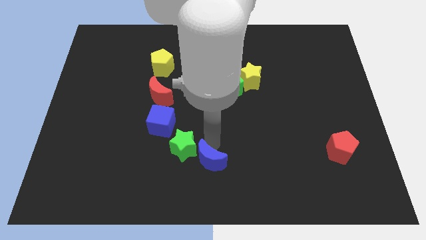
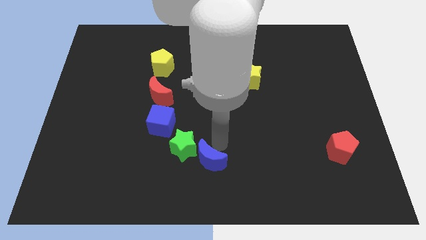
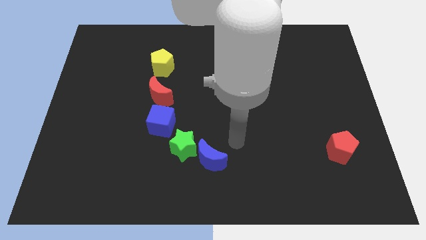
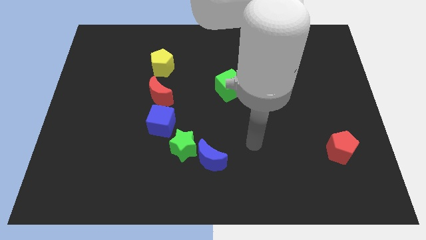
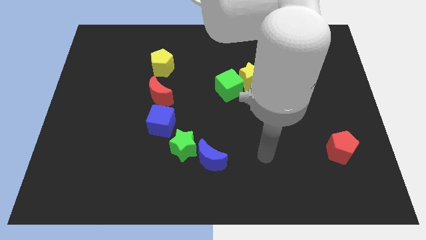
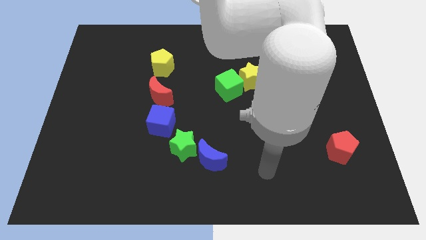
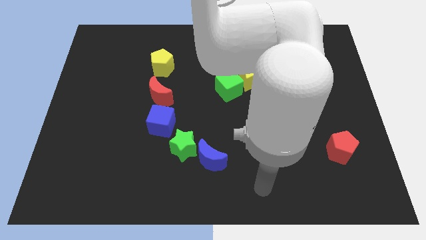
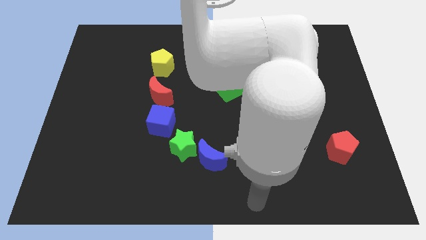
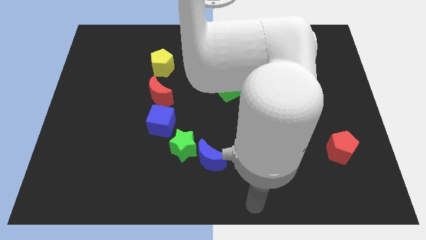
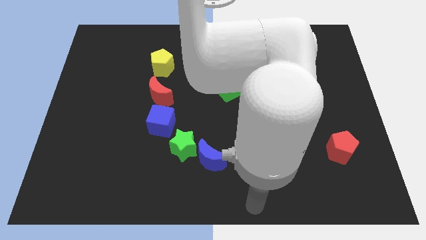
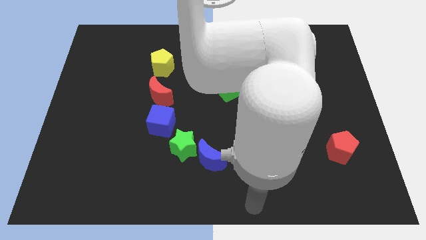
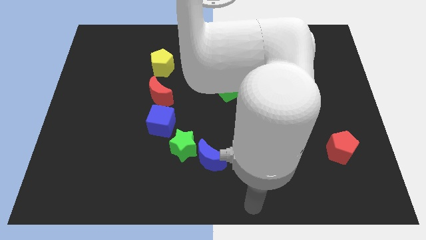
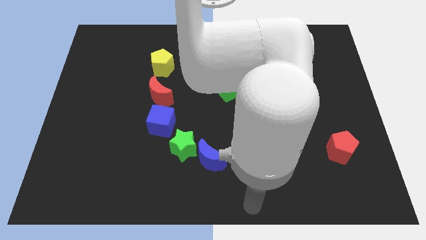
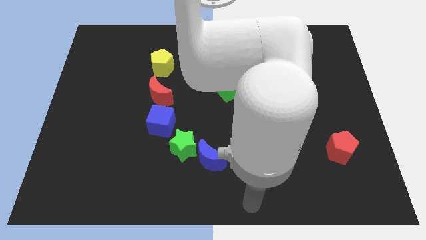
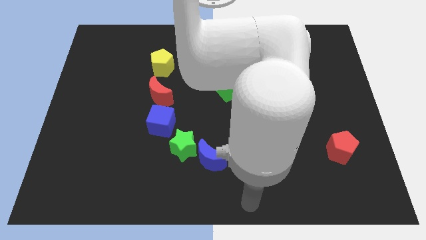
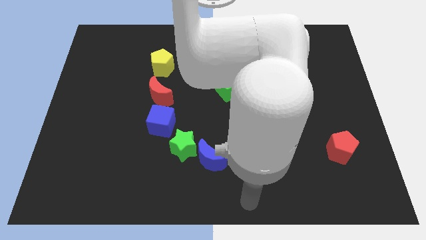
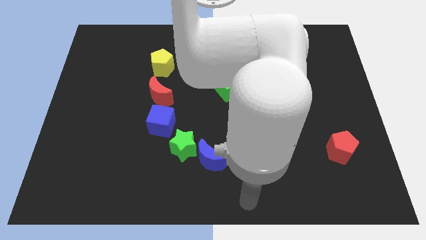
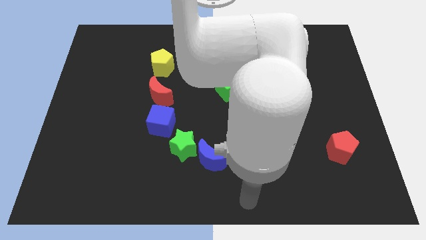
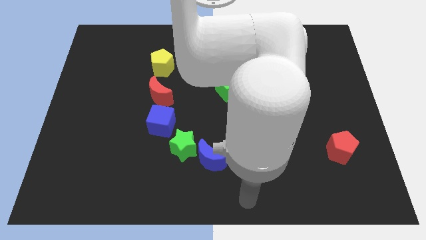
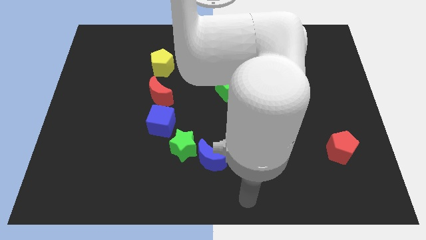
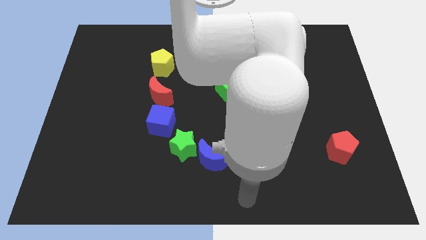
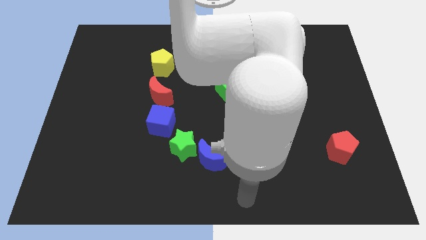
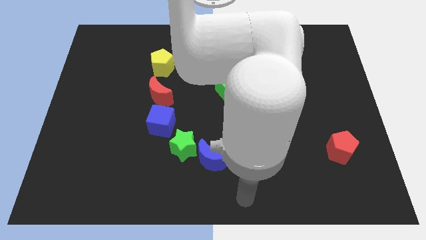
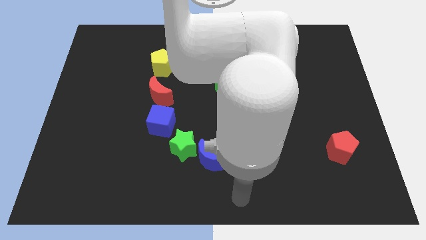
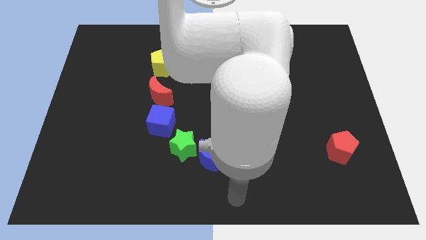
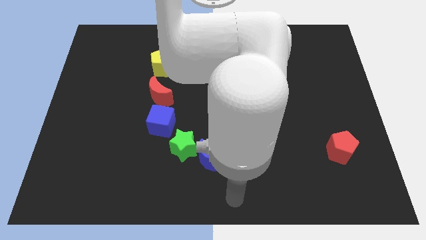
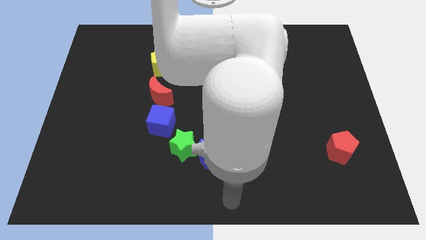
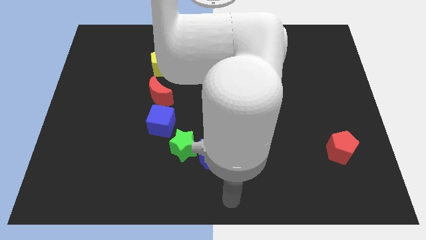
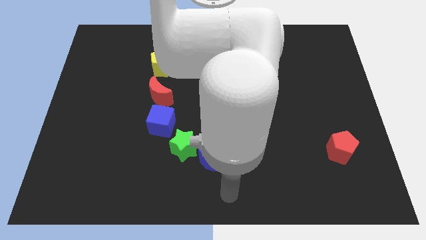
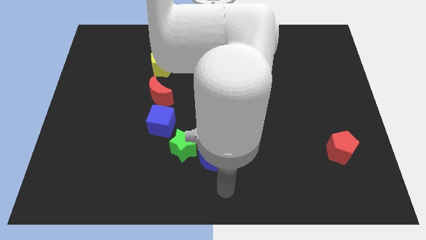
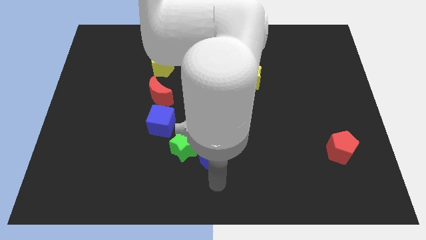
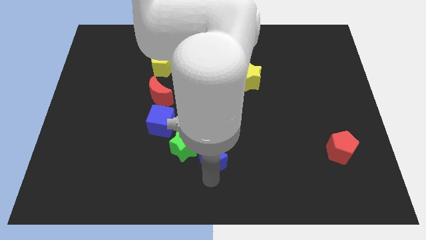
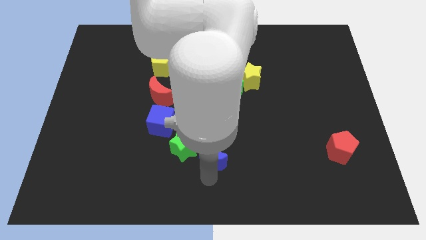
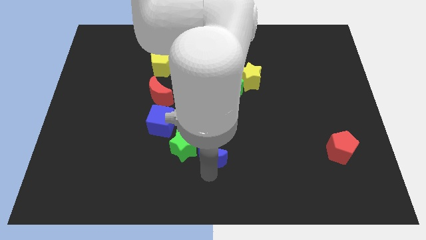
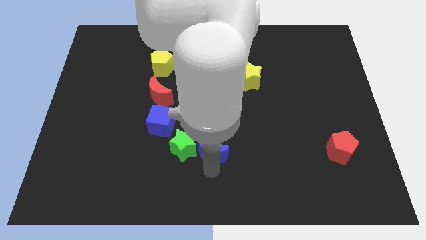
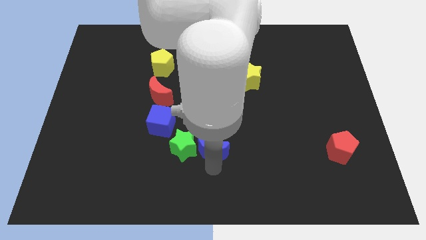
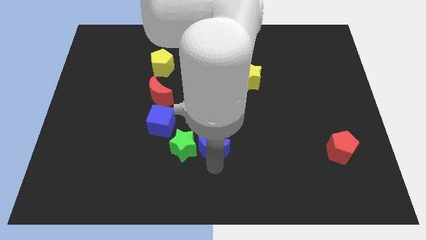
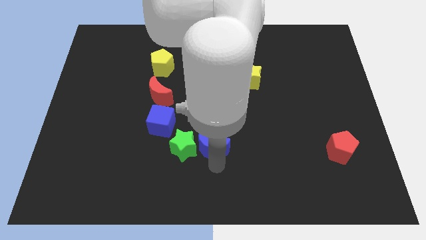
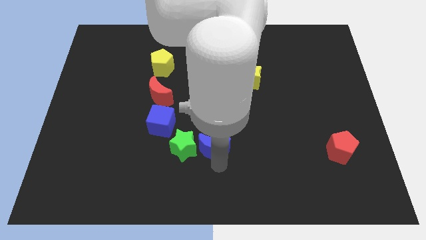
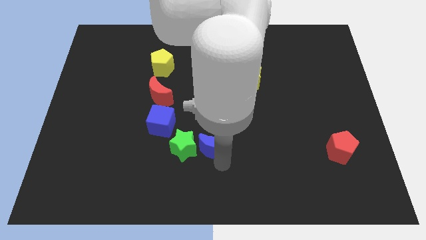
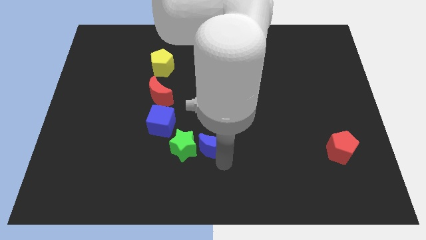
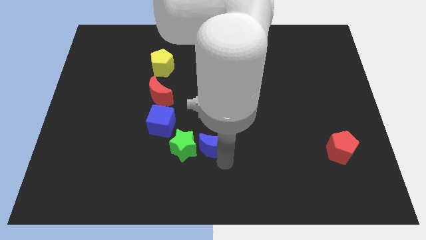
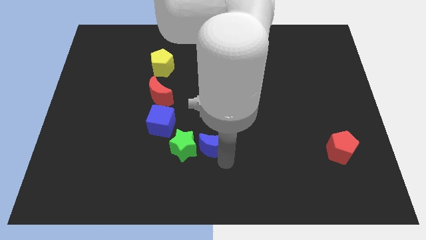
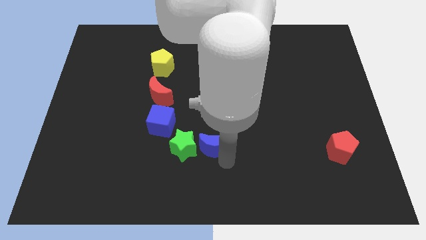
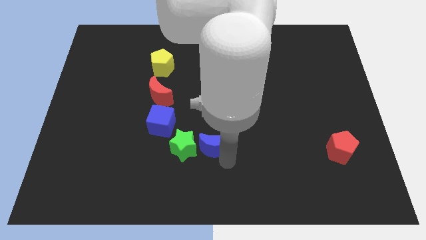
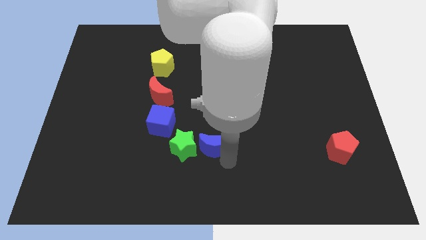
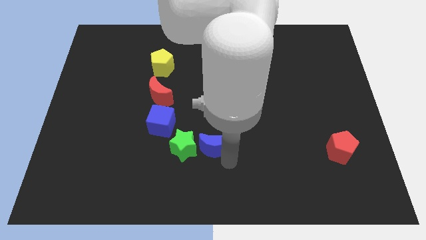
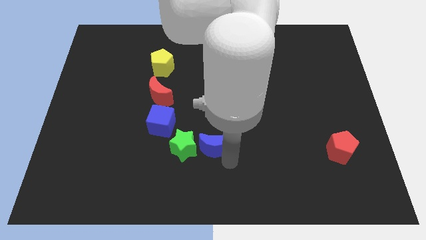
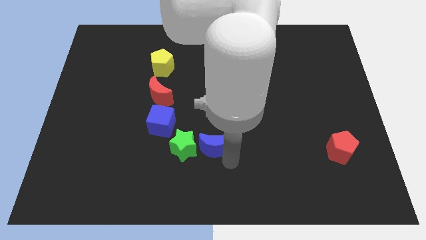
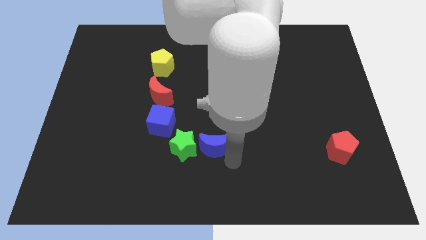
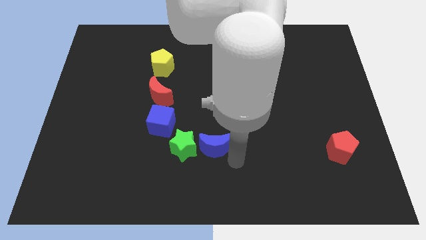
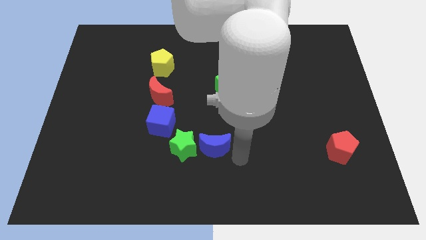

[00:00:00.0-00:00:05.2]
move the blue moon up slightly

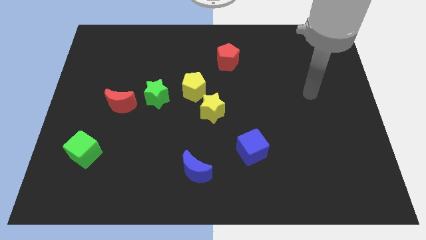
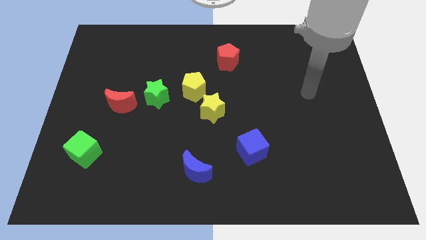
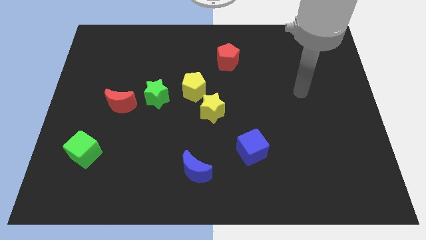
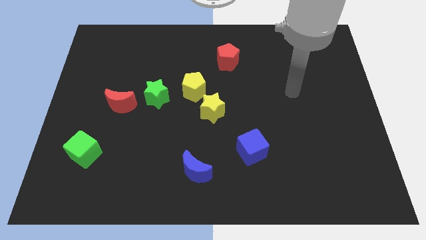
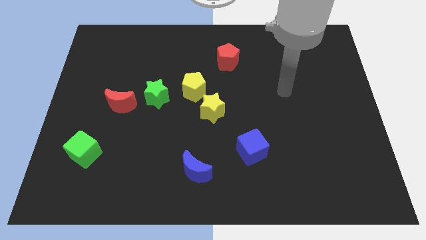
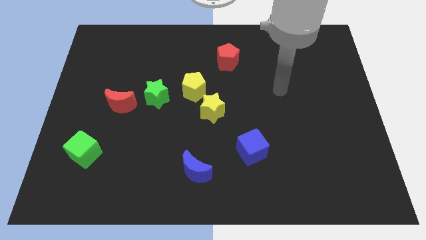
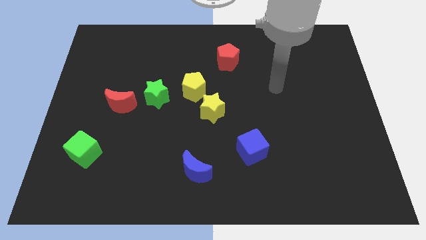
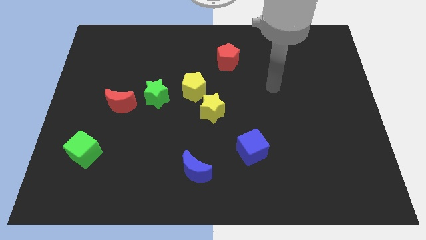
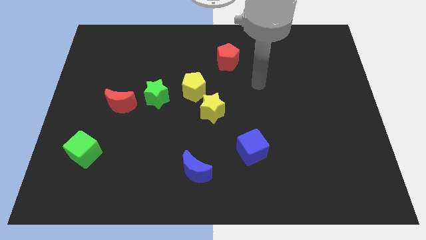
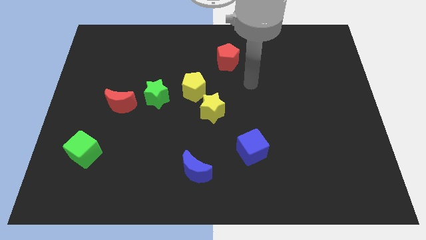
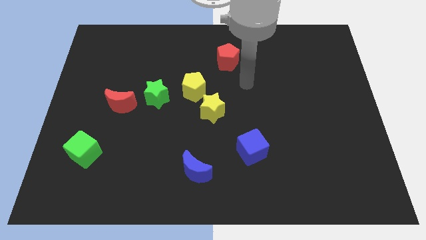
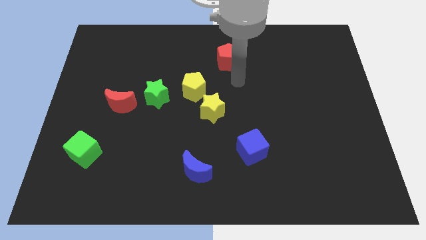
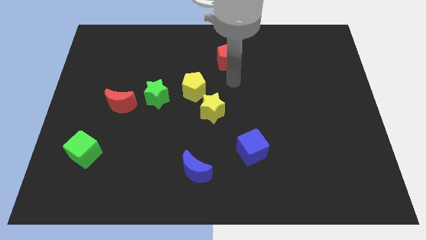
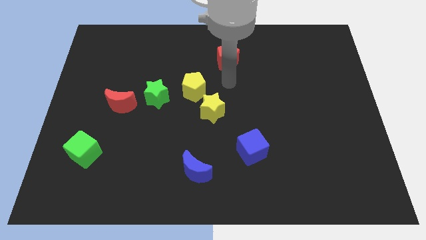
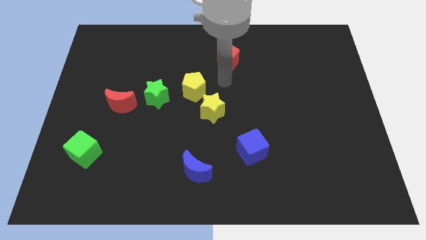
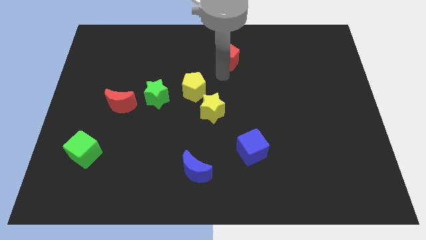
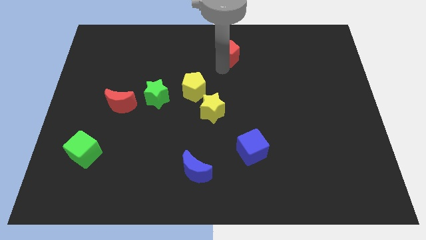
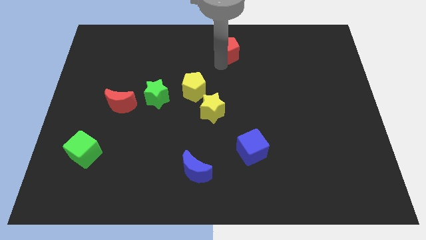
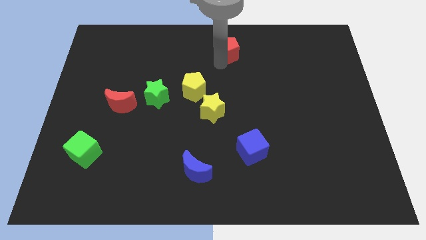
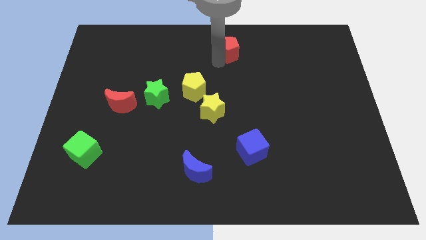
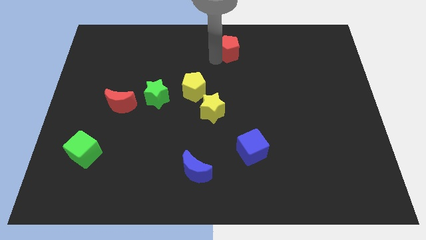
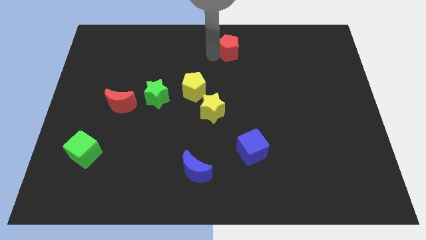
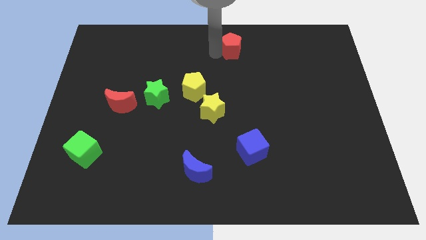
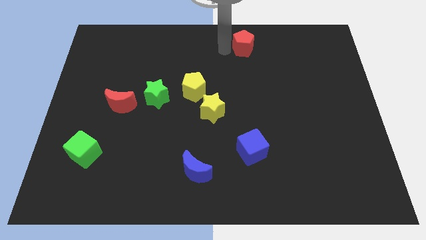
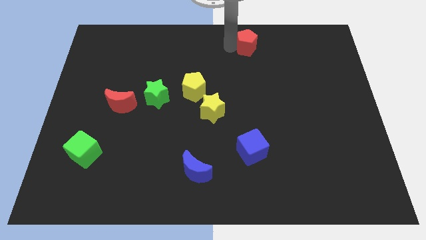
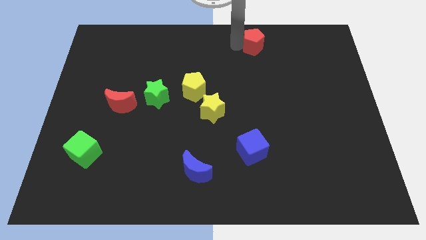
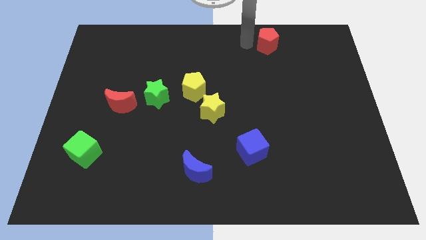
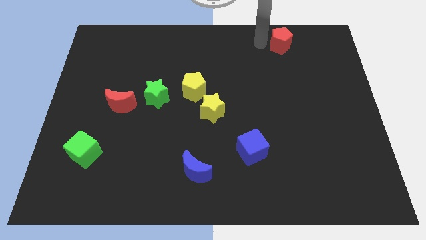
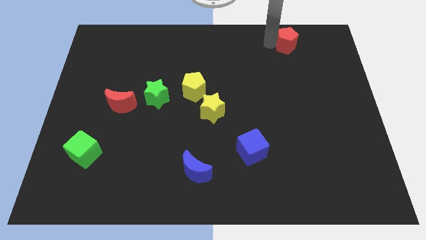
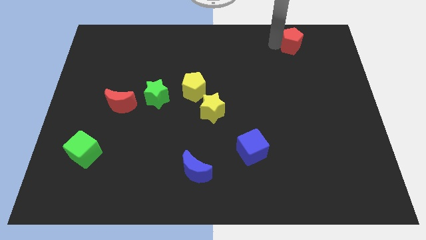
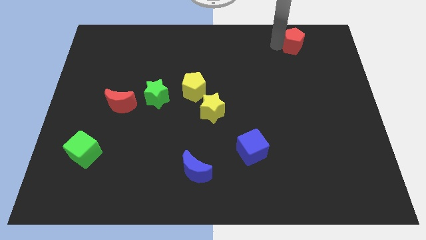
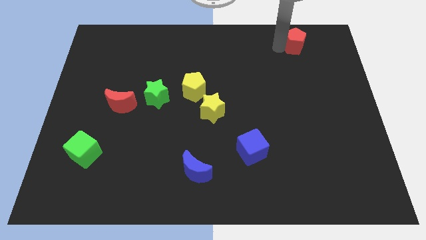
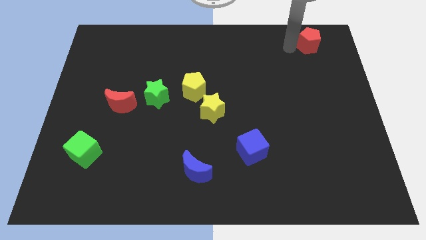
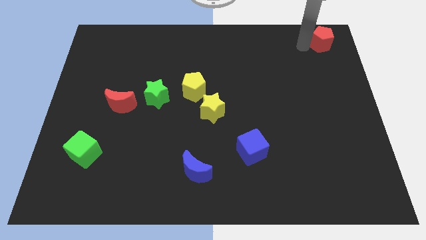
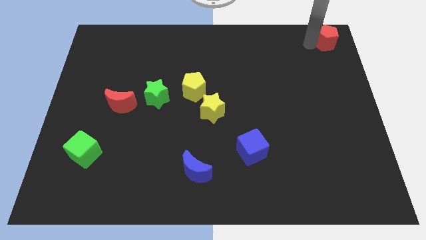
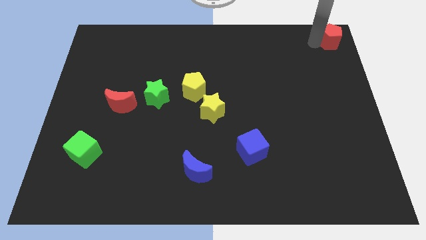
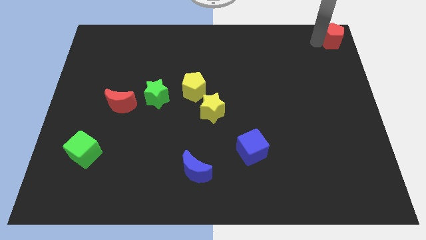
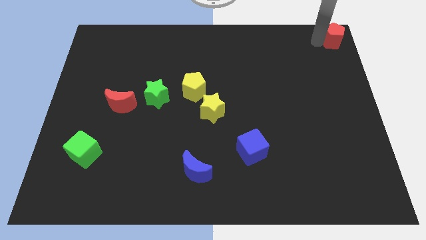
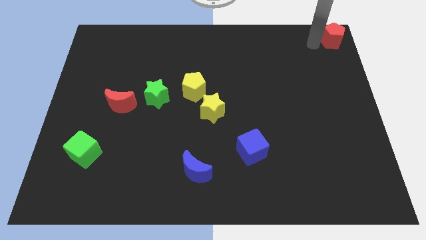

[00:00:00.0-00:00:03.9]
place the red pentagon at top right corner of the board
